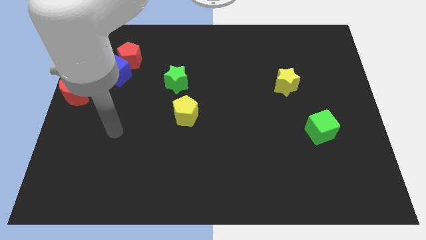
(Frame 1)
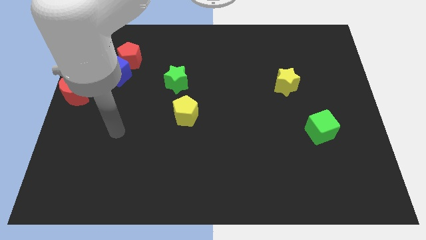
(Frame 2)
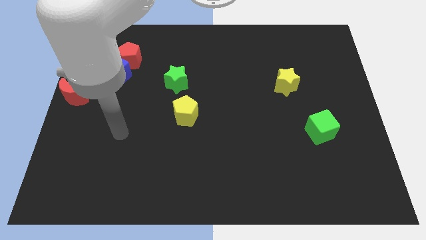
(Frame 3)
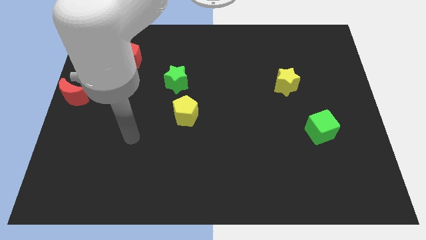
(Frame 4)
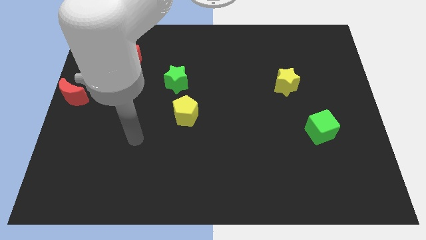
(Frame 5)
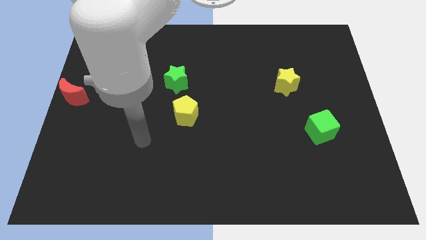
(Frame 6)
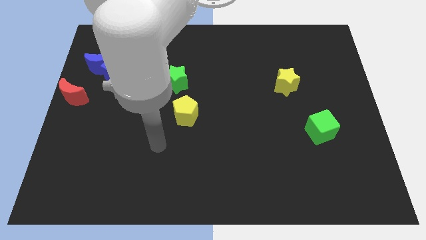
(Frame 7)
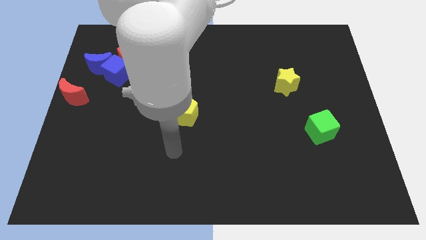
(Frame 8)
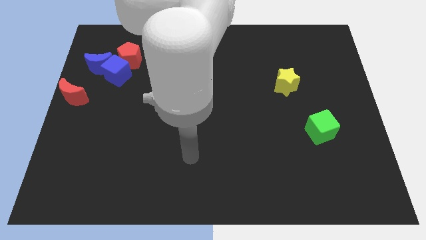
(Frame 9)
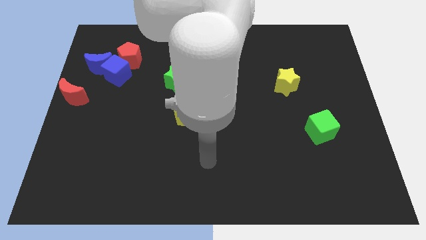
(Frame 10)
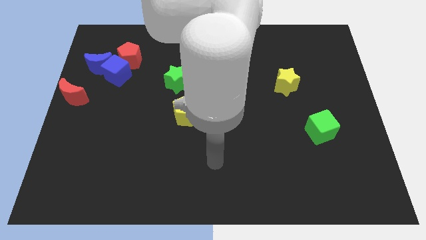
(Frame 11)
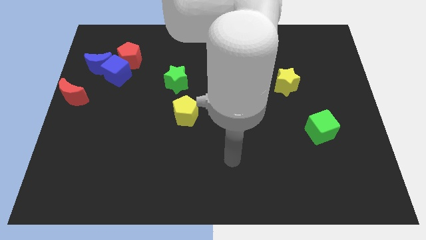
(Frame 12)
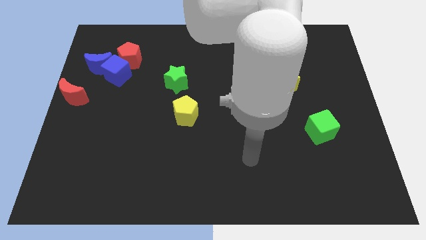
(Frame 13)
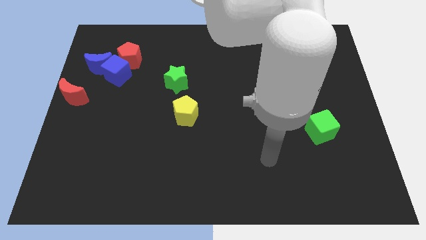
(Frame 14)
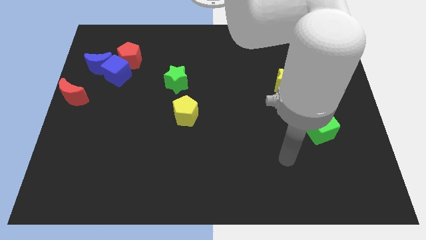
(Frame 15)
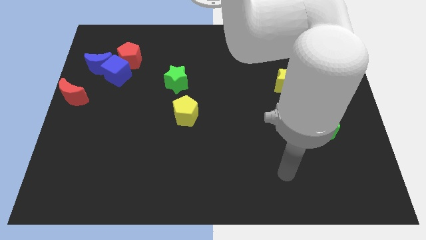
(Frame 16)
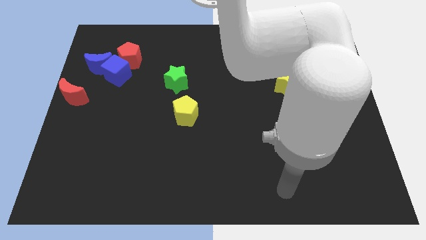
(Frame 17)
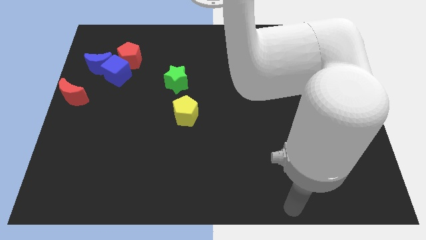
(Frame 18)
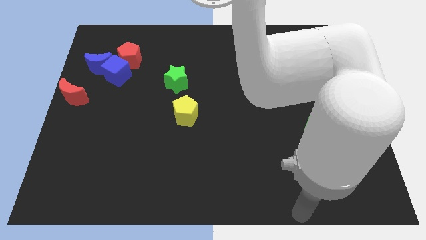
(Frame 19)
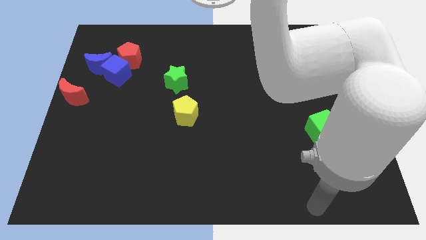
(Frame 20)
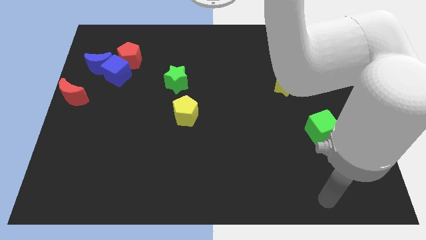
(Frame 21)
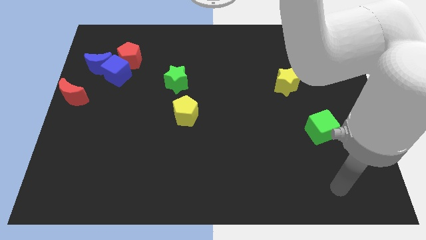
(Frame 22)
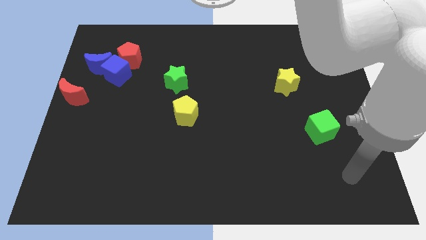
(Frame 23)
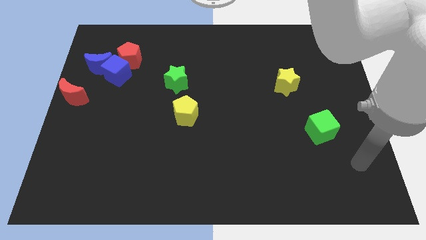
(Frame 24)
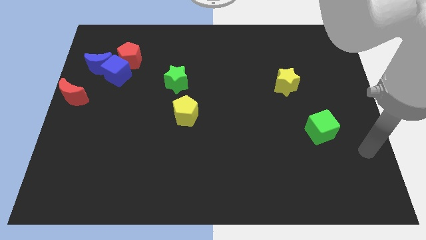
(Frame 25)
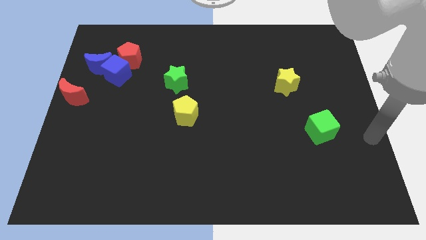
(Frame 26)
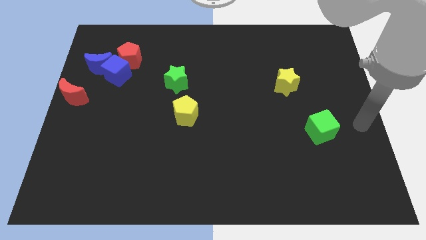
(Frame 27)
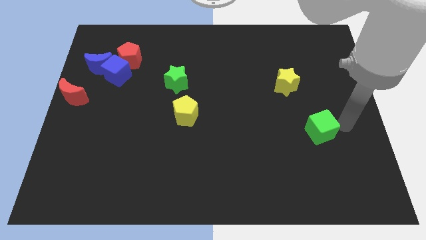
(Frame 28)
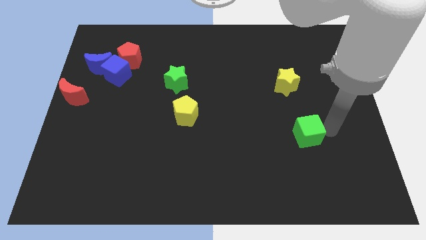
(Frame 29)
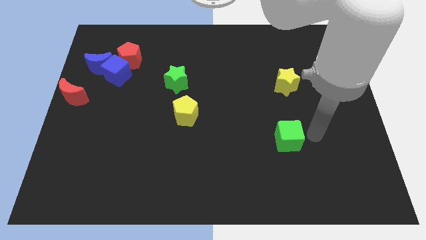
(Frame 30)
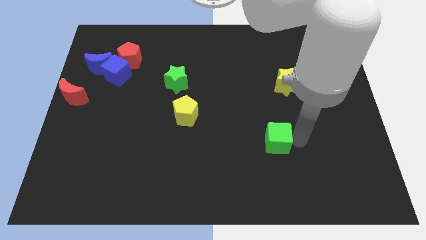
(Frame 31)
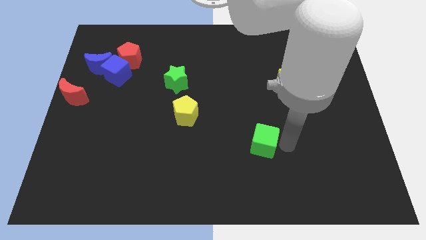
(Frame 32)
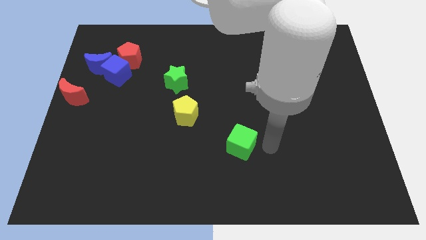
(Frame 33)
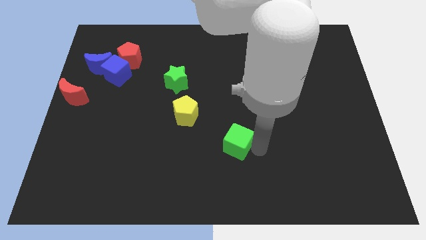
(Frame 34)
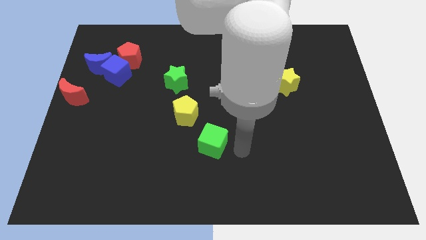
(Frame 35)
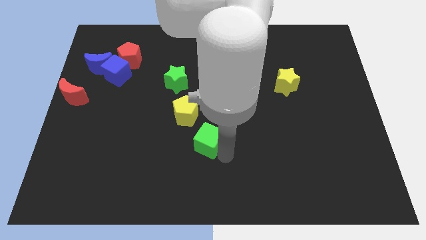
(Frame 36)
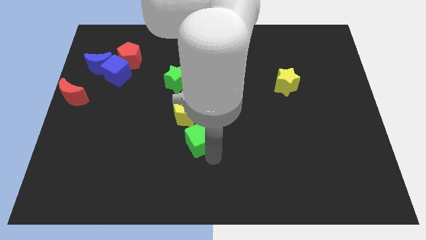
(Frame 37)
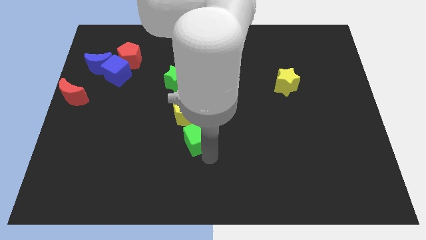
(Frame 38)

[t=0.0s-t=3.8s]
place green cube to the bottom of the yellow pentagon

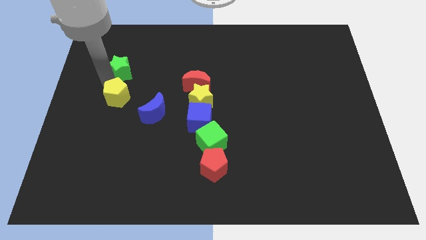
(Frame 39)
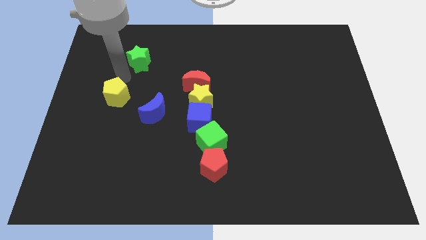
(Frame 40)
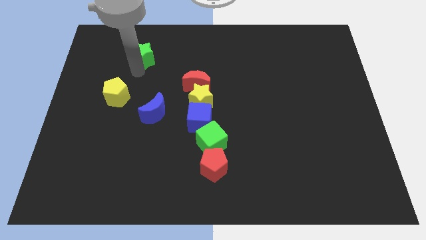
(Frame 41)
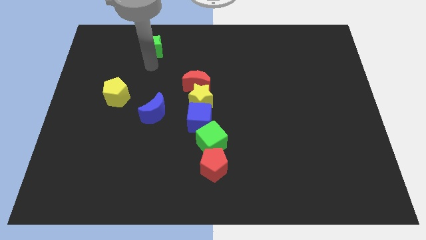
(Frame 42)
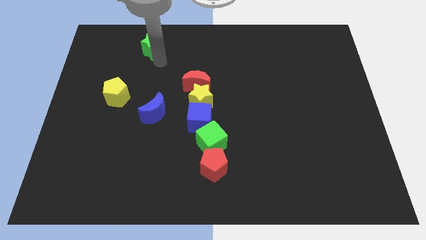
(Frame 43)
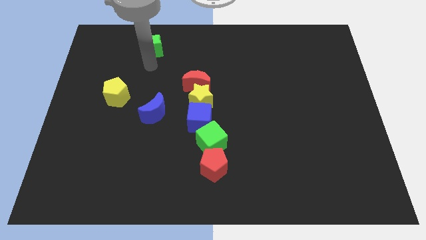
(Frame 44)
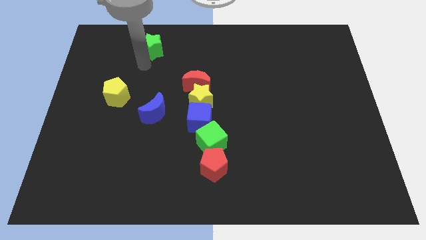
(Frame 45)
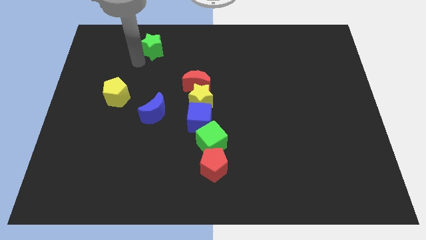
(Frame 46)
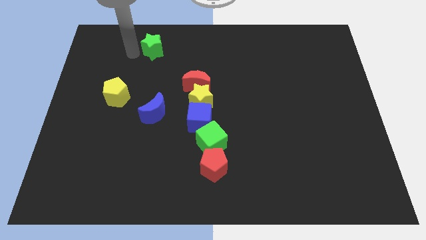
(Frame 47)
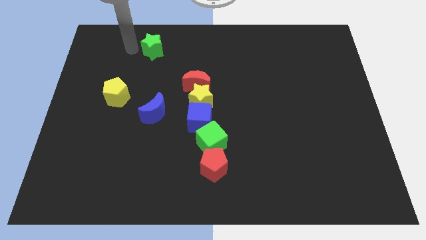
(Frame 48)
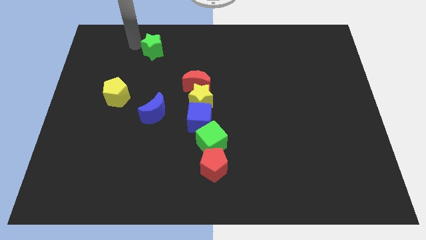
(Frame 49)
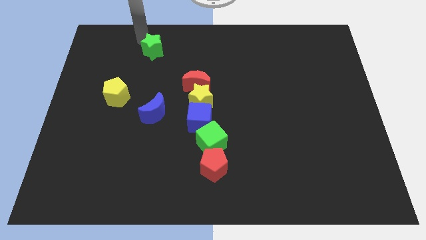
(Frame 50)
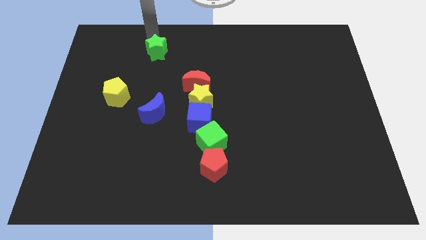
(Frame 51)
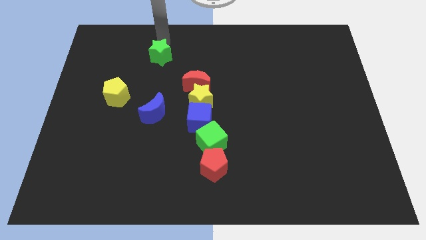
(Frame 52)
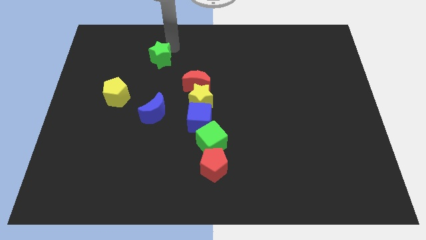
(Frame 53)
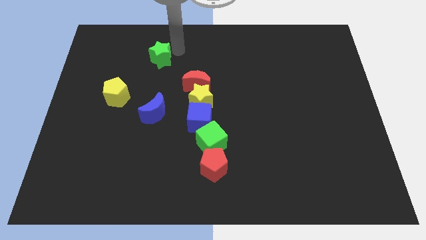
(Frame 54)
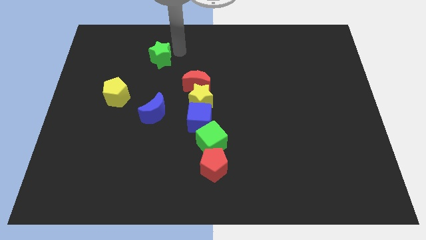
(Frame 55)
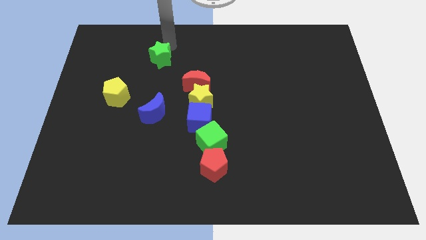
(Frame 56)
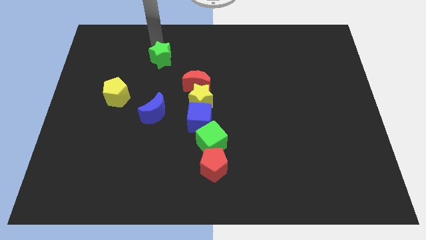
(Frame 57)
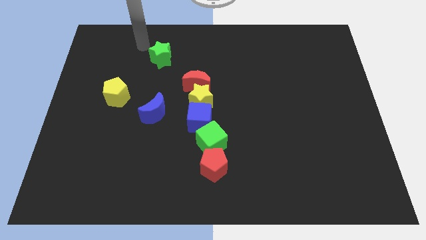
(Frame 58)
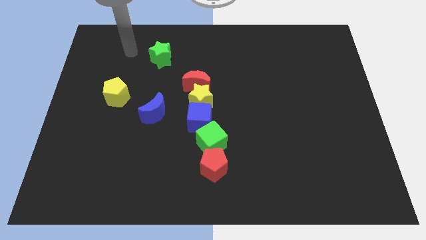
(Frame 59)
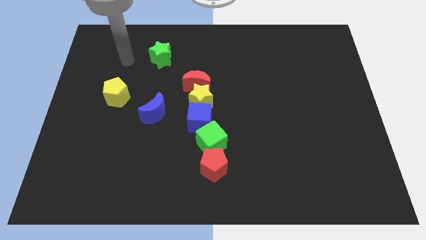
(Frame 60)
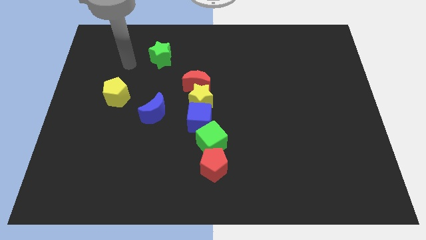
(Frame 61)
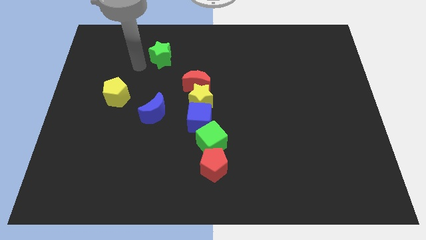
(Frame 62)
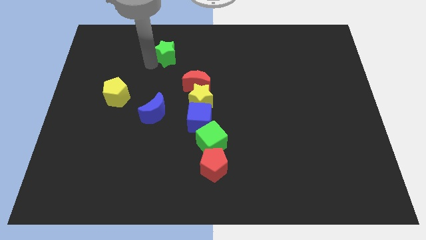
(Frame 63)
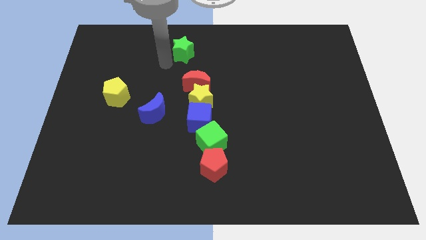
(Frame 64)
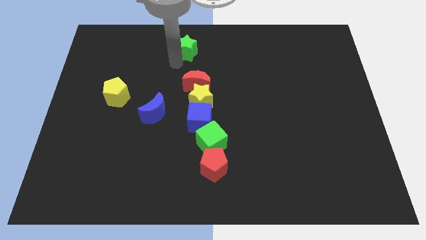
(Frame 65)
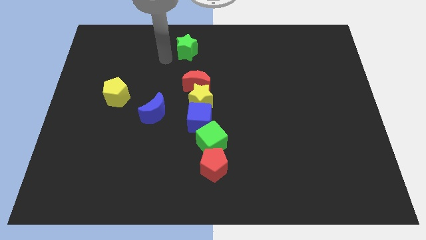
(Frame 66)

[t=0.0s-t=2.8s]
push the green star towards the top side of the board

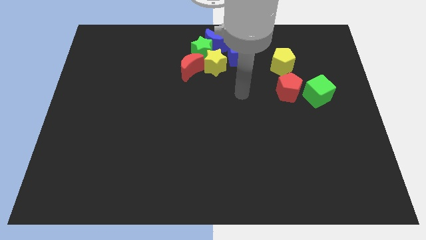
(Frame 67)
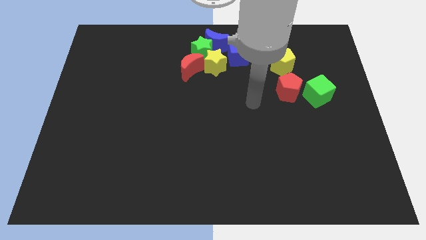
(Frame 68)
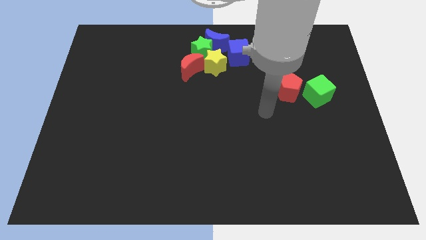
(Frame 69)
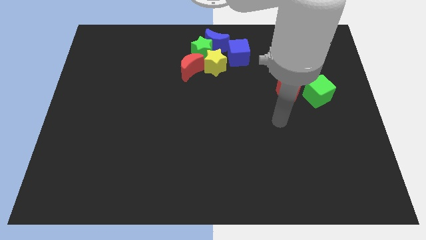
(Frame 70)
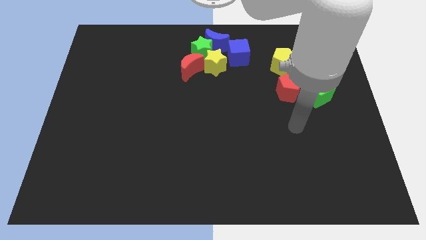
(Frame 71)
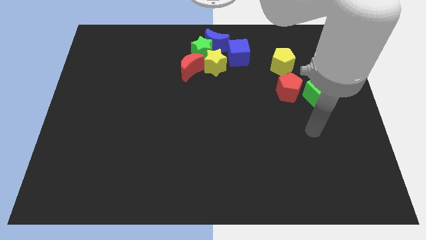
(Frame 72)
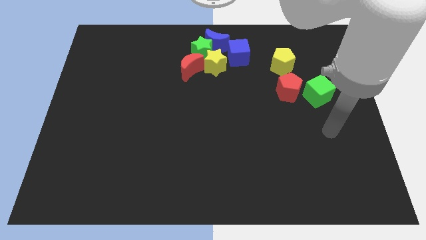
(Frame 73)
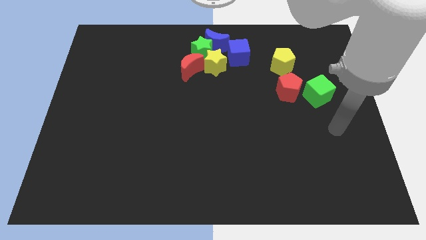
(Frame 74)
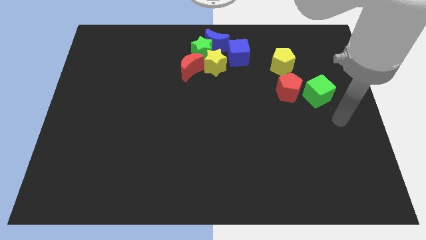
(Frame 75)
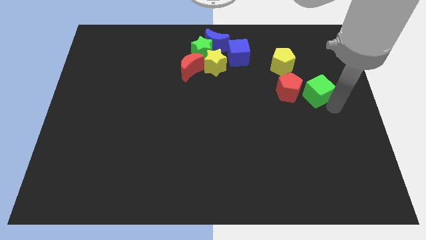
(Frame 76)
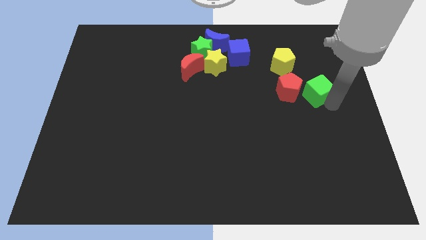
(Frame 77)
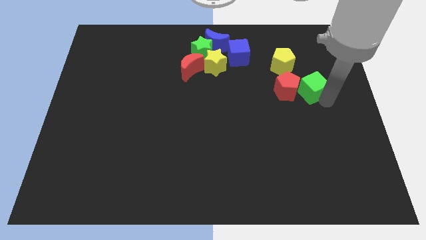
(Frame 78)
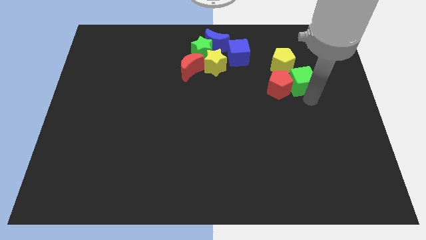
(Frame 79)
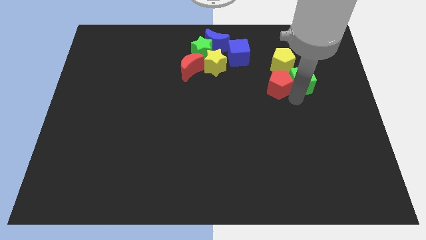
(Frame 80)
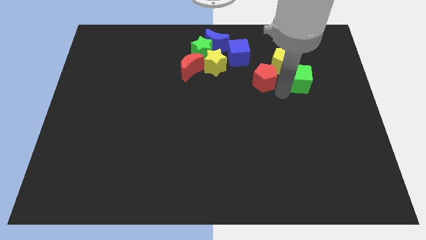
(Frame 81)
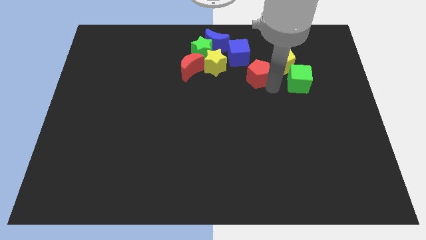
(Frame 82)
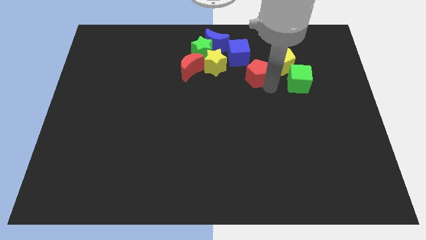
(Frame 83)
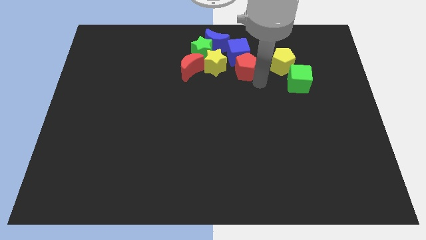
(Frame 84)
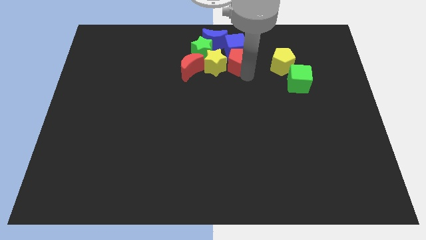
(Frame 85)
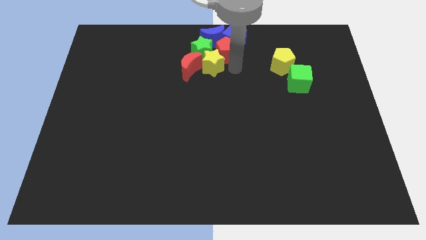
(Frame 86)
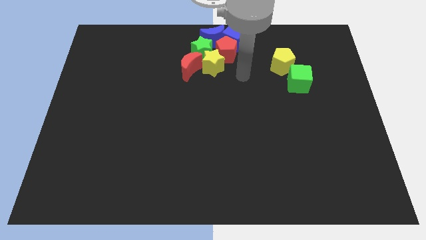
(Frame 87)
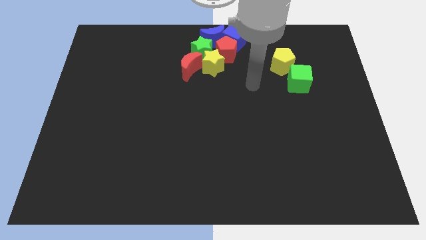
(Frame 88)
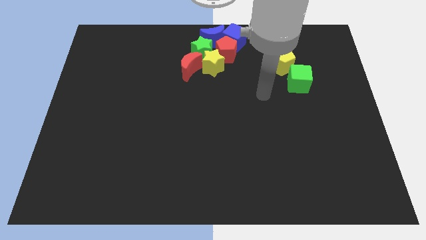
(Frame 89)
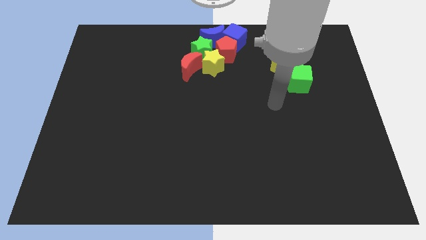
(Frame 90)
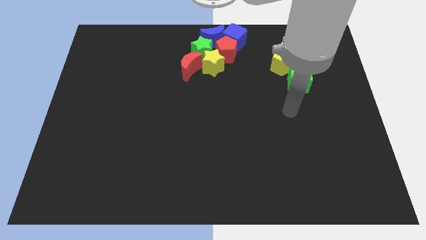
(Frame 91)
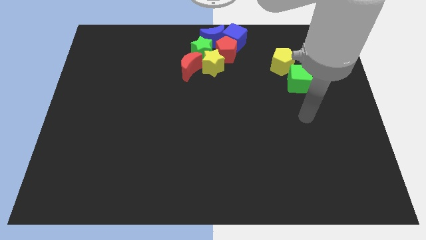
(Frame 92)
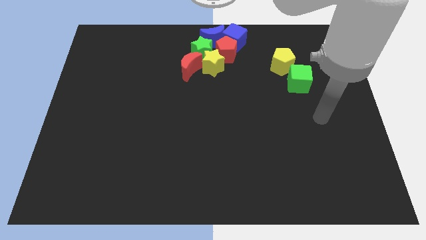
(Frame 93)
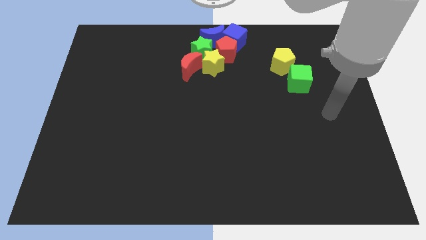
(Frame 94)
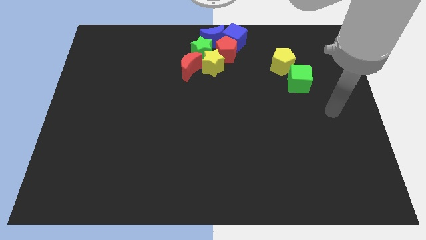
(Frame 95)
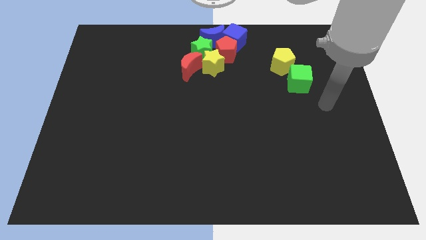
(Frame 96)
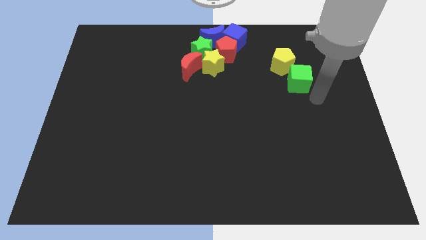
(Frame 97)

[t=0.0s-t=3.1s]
push the red pentagon into the group of blocks
